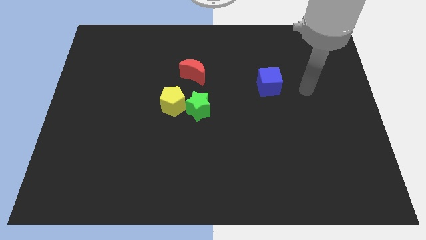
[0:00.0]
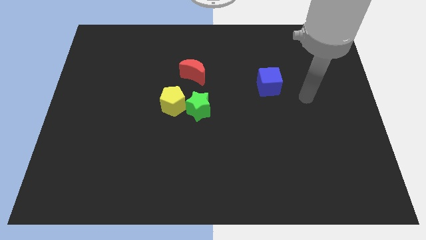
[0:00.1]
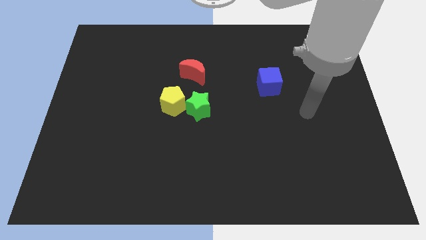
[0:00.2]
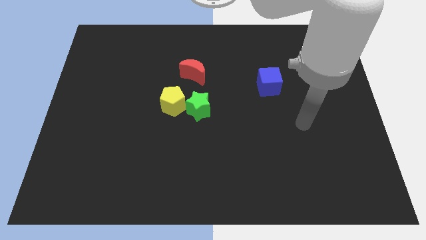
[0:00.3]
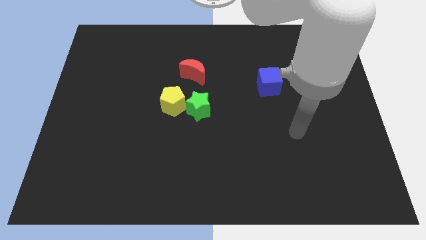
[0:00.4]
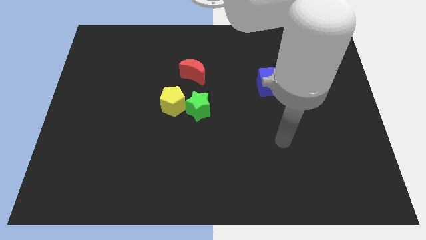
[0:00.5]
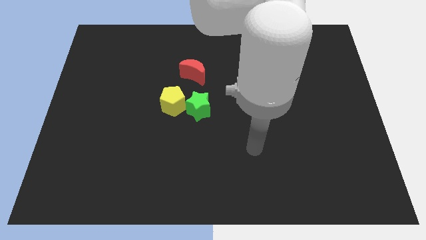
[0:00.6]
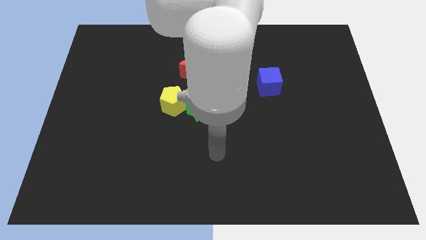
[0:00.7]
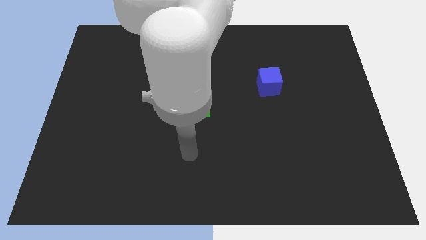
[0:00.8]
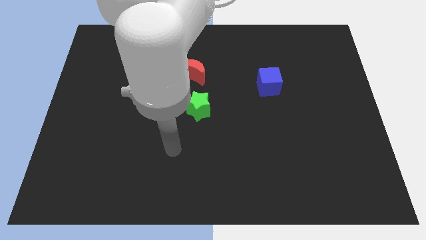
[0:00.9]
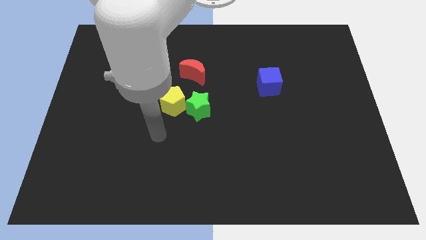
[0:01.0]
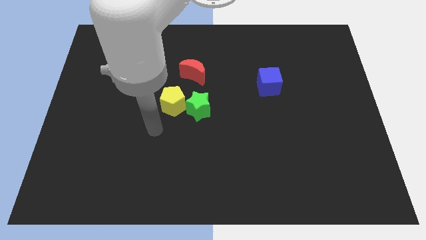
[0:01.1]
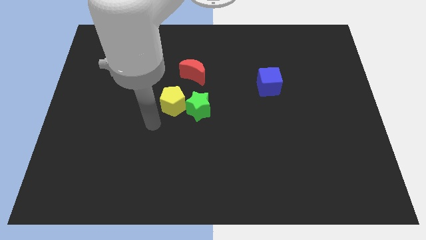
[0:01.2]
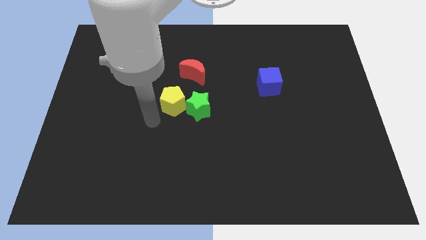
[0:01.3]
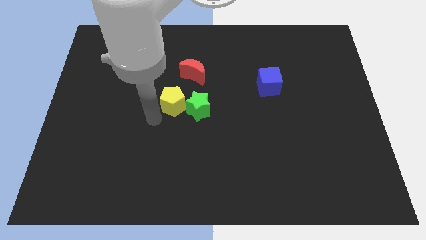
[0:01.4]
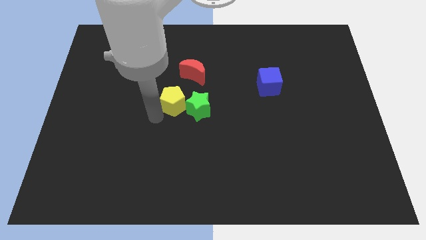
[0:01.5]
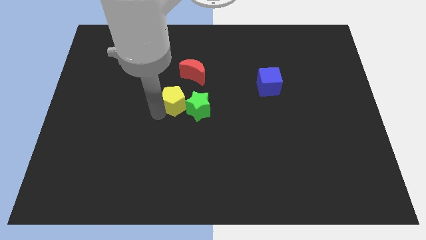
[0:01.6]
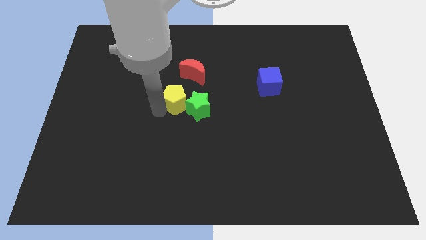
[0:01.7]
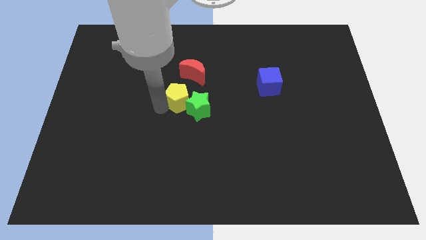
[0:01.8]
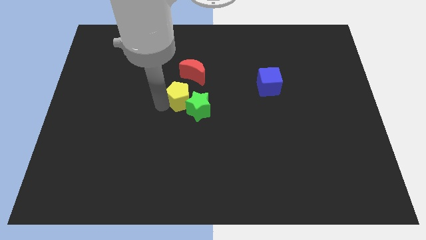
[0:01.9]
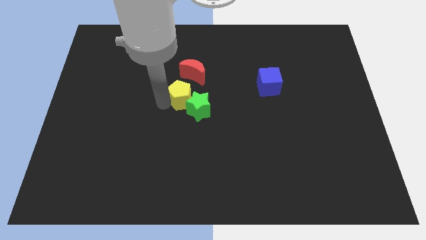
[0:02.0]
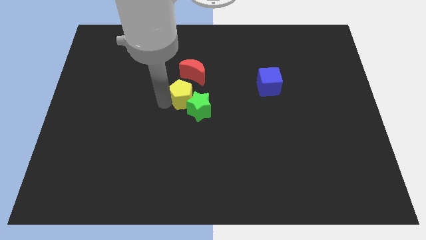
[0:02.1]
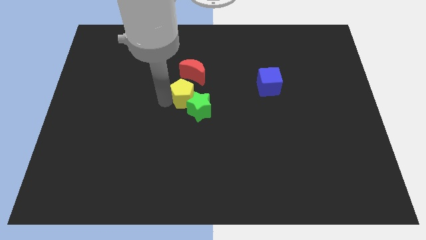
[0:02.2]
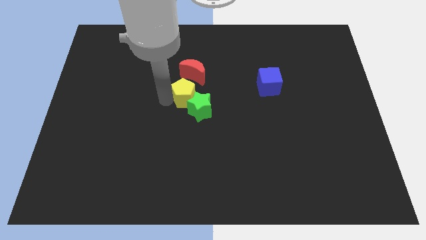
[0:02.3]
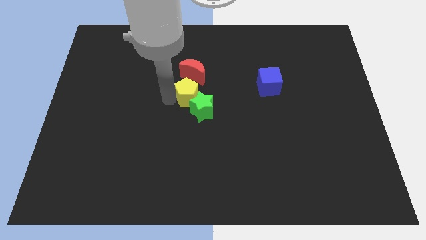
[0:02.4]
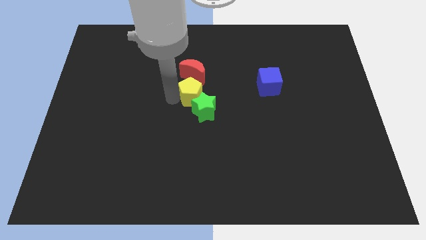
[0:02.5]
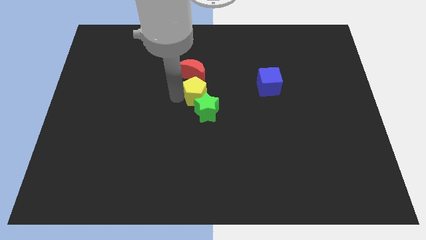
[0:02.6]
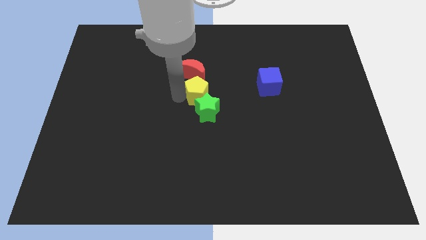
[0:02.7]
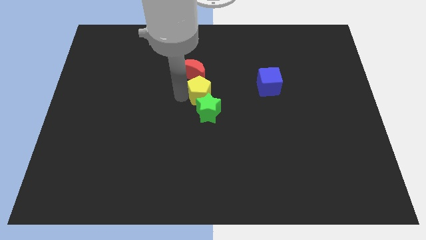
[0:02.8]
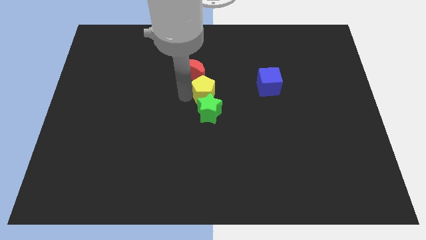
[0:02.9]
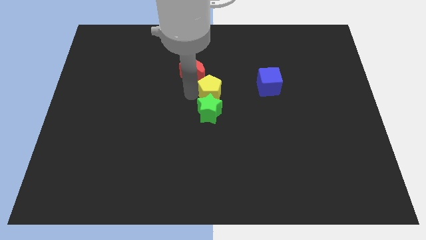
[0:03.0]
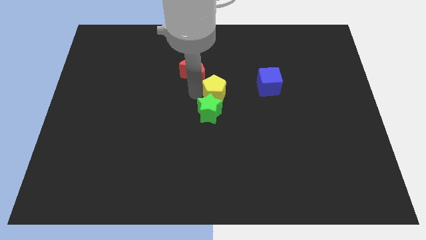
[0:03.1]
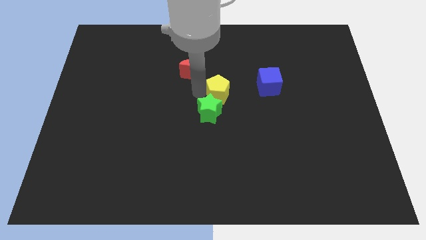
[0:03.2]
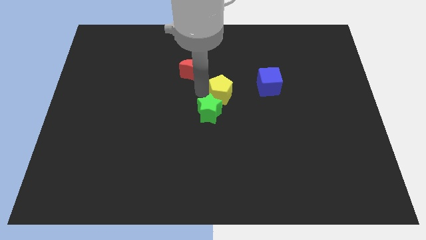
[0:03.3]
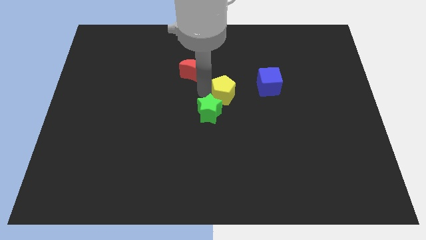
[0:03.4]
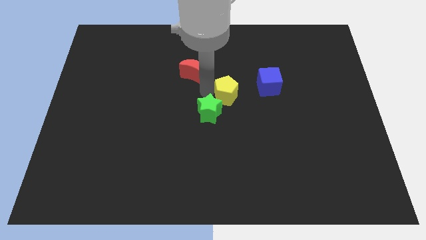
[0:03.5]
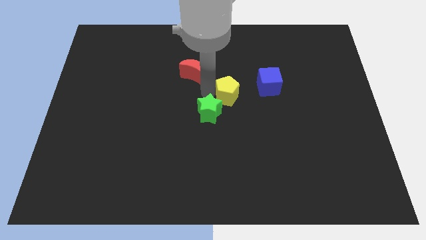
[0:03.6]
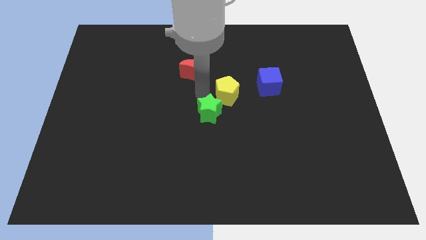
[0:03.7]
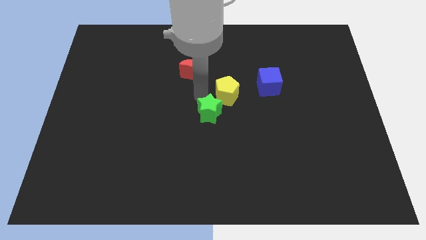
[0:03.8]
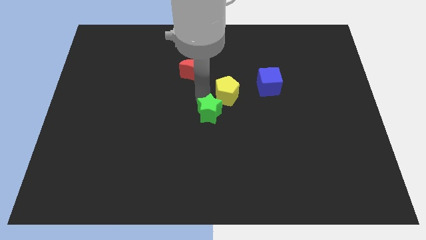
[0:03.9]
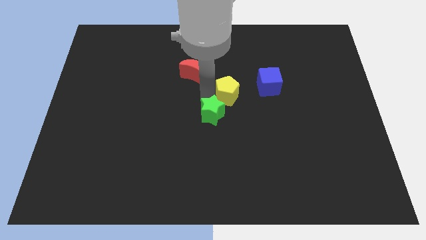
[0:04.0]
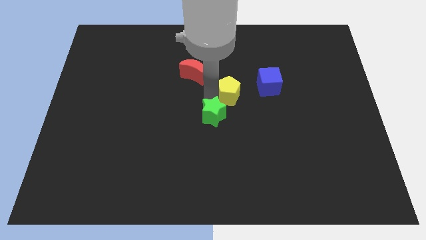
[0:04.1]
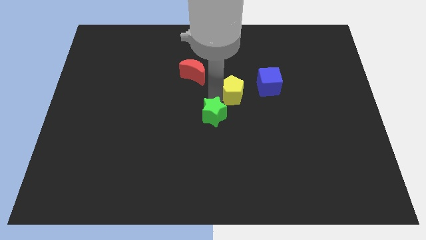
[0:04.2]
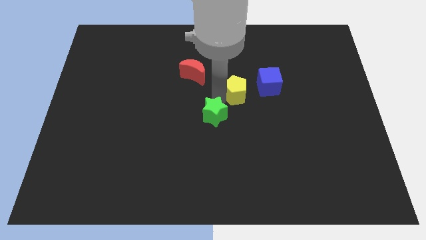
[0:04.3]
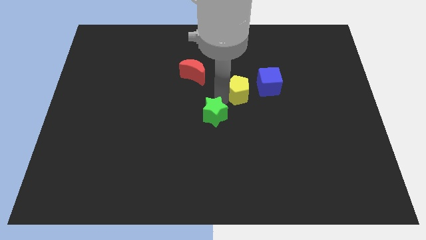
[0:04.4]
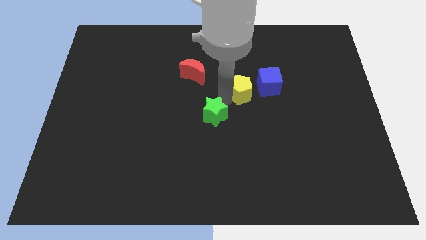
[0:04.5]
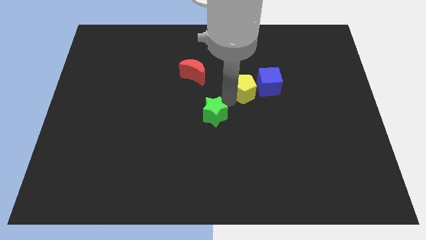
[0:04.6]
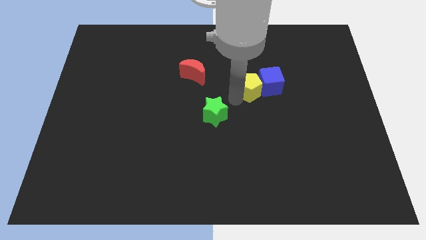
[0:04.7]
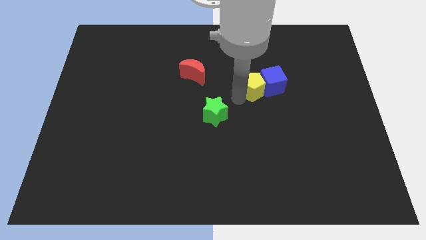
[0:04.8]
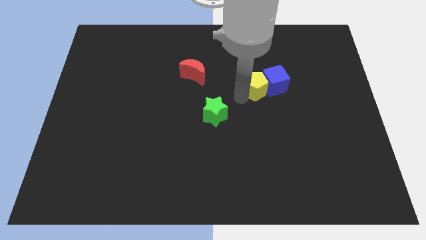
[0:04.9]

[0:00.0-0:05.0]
move the yellow block next to the blue block

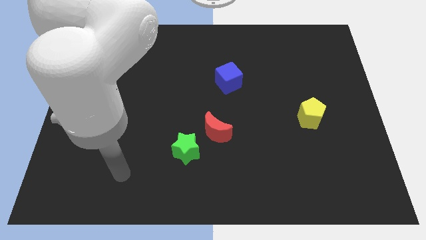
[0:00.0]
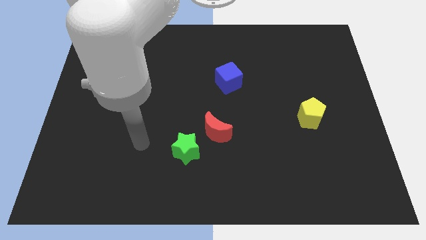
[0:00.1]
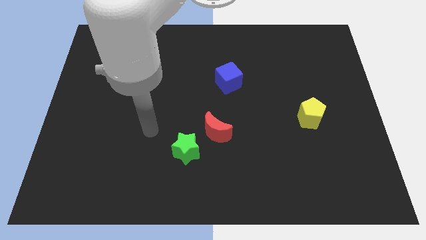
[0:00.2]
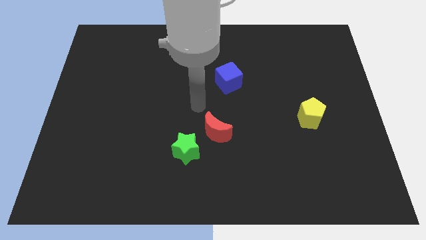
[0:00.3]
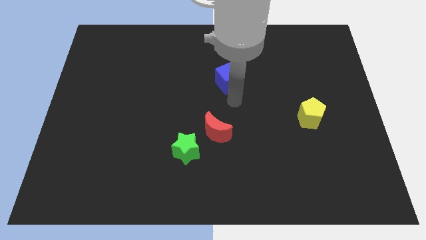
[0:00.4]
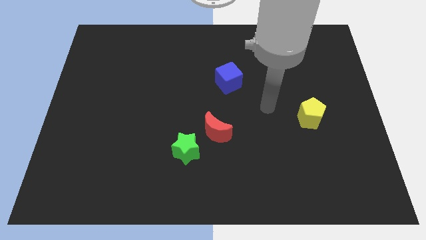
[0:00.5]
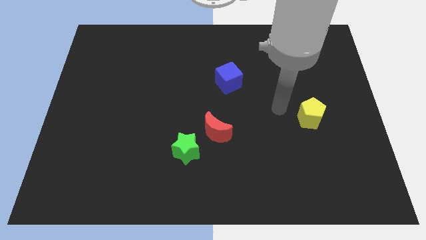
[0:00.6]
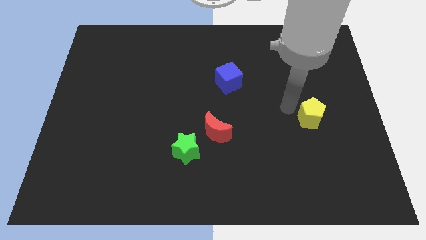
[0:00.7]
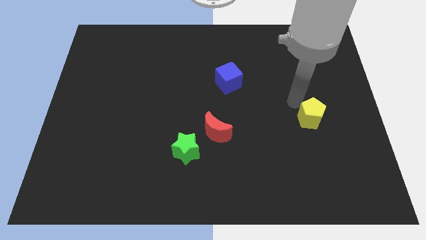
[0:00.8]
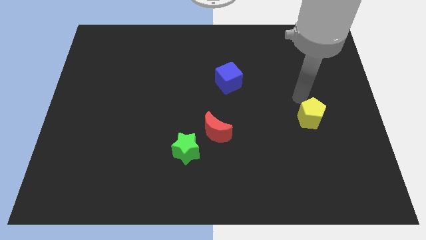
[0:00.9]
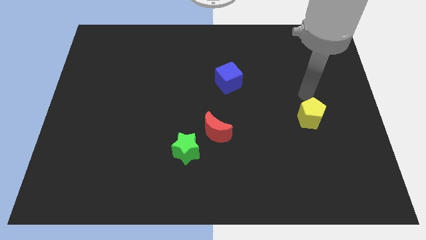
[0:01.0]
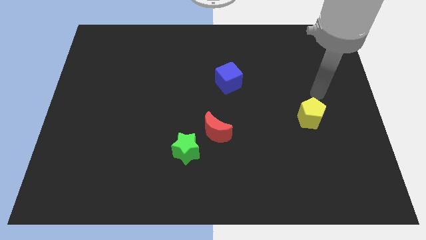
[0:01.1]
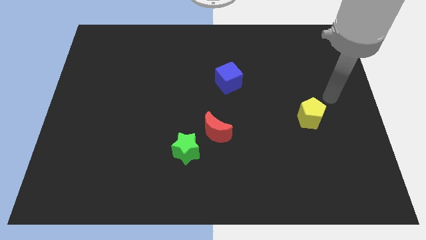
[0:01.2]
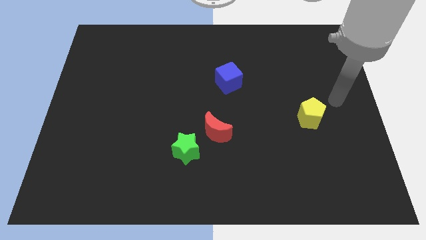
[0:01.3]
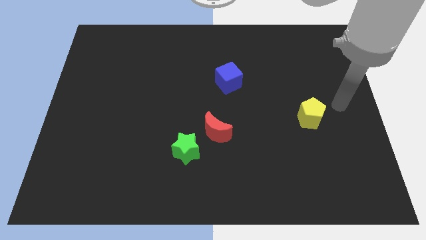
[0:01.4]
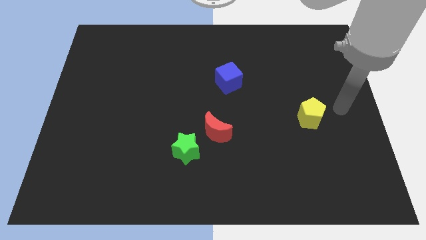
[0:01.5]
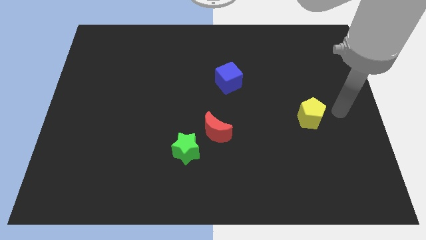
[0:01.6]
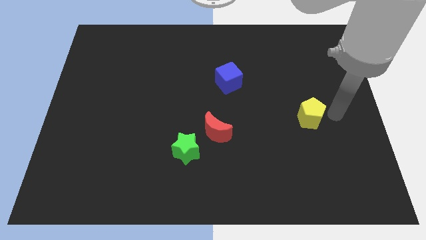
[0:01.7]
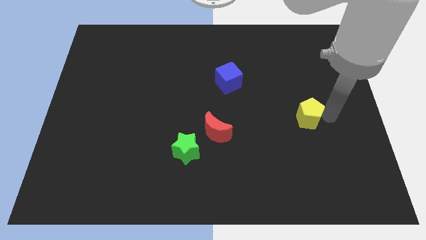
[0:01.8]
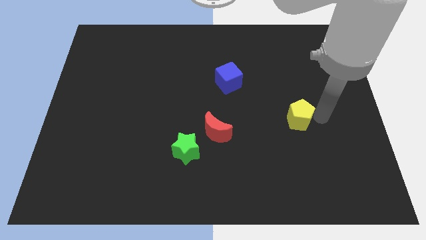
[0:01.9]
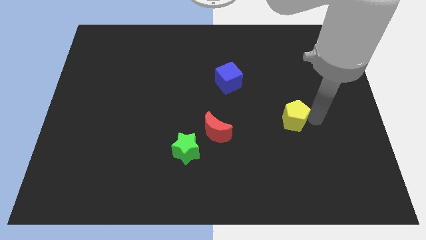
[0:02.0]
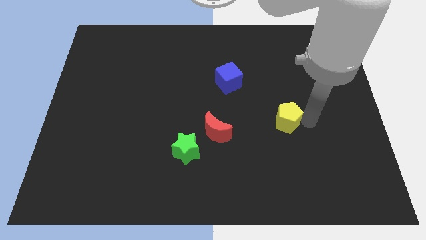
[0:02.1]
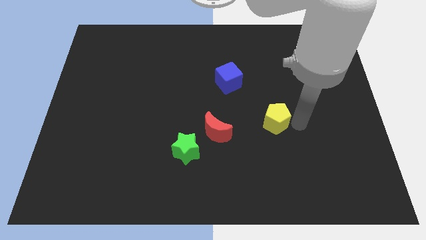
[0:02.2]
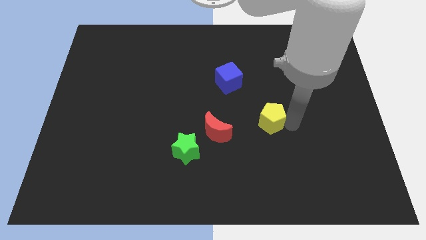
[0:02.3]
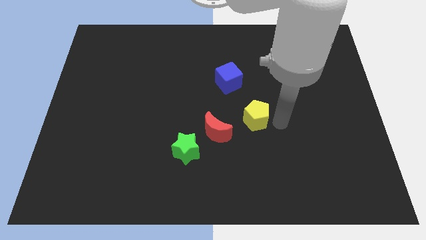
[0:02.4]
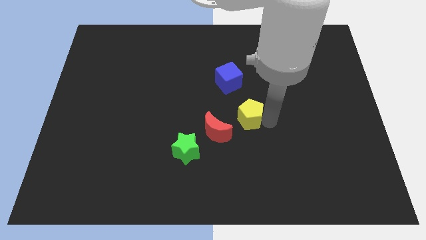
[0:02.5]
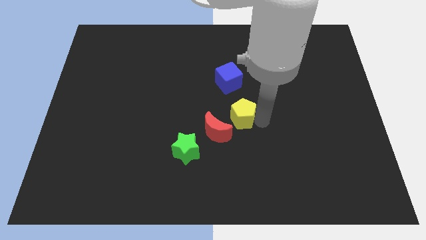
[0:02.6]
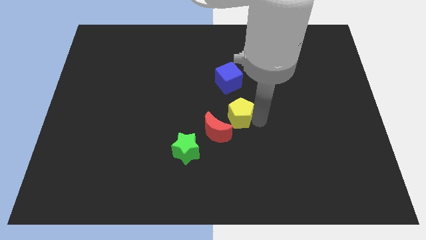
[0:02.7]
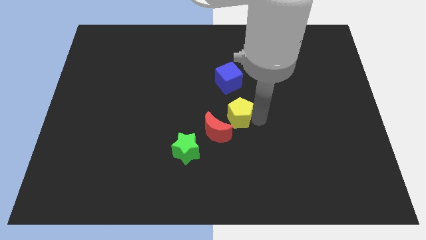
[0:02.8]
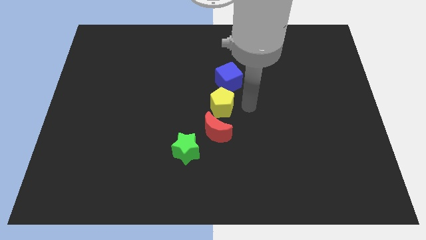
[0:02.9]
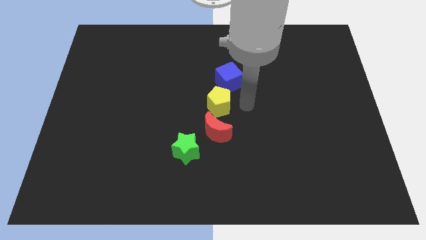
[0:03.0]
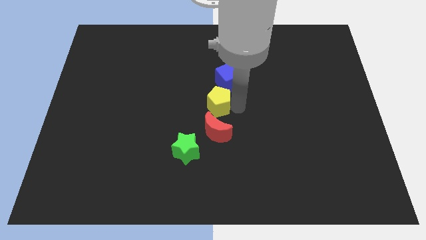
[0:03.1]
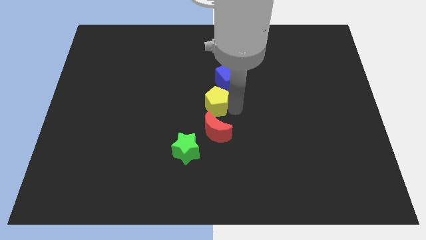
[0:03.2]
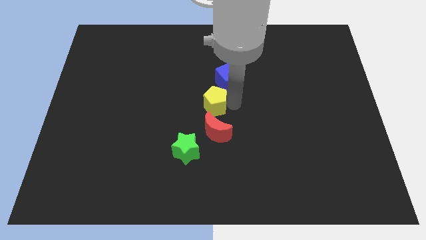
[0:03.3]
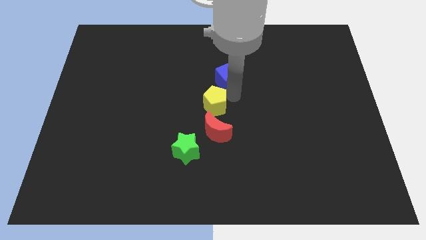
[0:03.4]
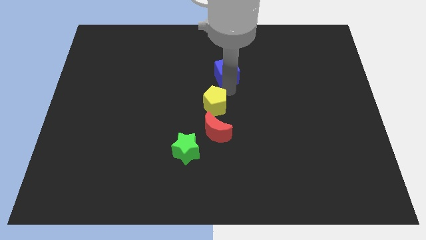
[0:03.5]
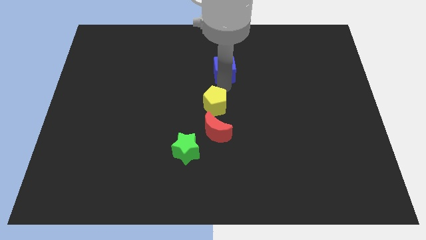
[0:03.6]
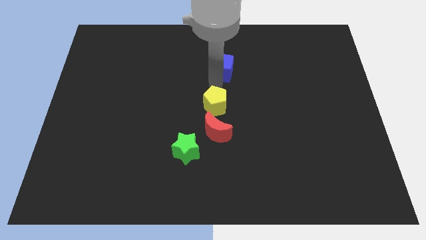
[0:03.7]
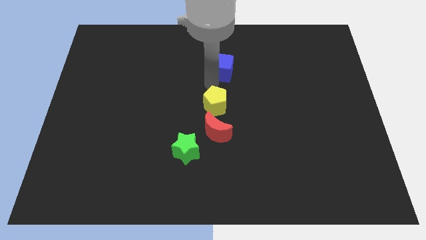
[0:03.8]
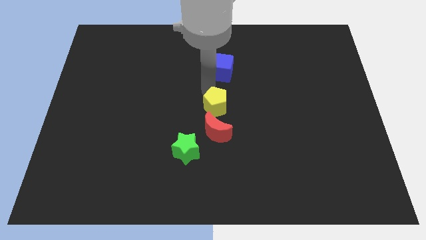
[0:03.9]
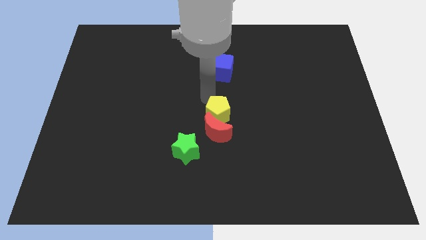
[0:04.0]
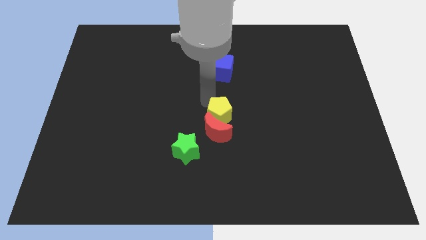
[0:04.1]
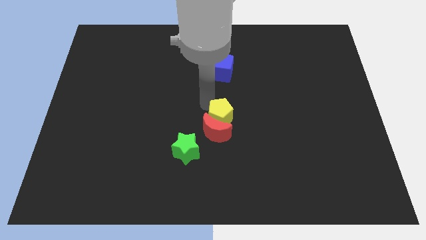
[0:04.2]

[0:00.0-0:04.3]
move the pentagon next to the red moon
